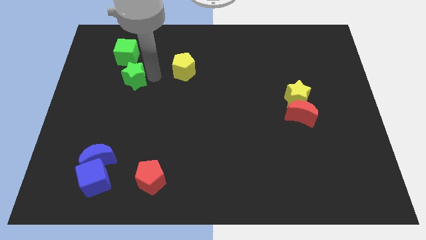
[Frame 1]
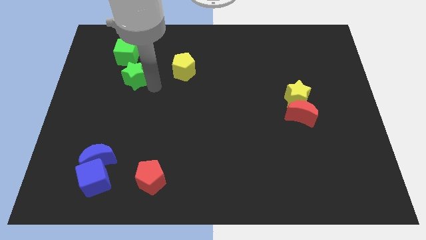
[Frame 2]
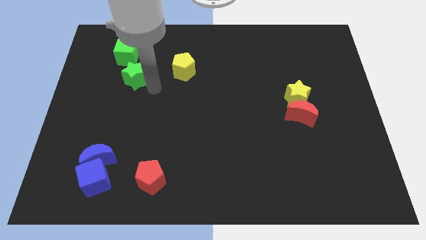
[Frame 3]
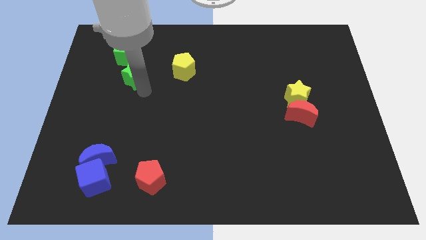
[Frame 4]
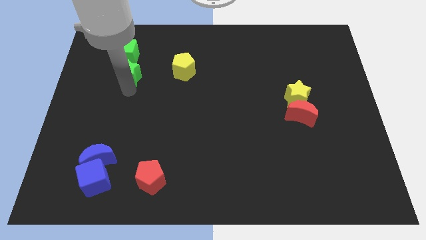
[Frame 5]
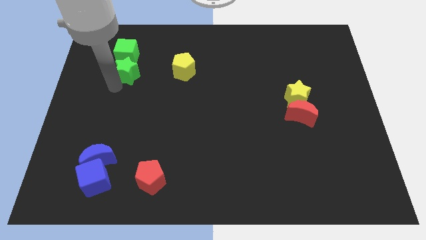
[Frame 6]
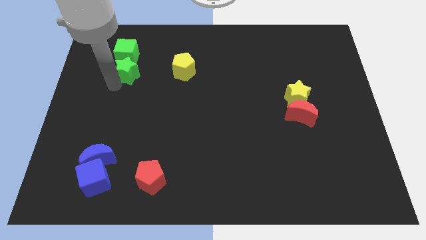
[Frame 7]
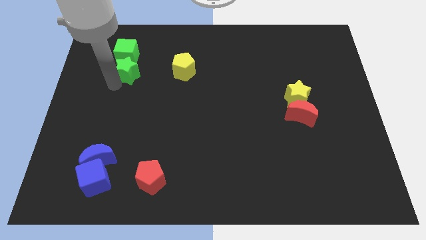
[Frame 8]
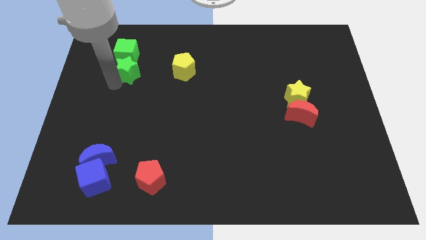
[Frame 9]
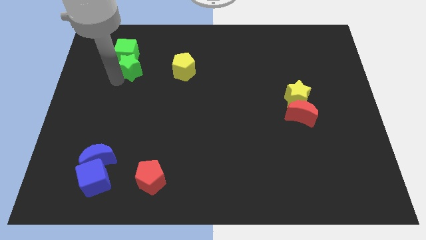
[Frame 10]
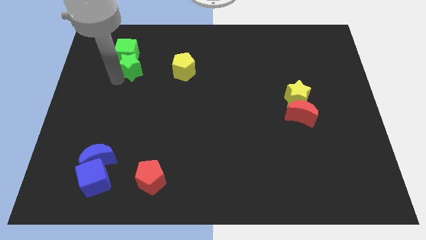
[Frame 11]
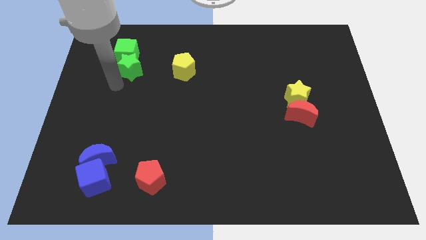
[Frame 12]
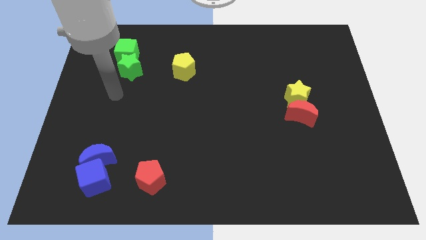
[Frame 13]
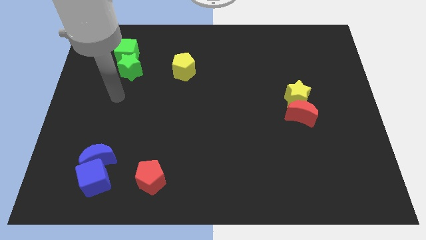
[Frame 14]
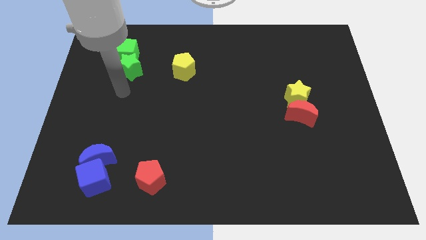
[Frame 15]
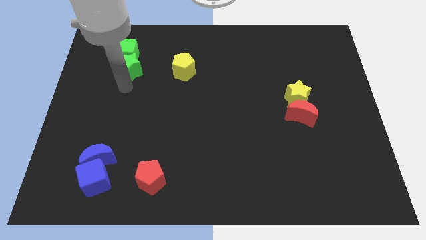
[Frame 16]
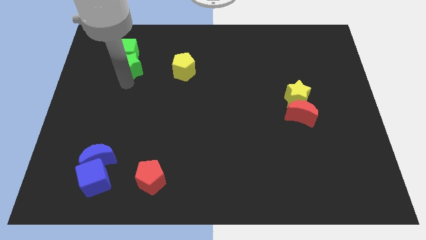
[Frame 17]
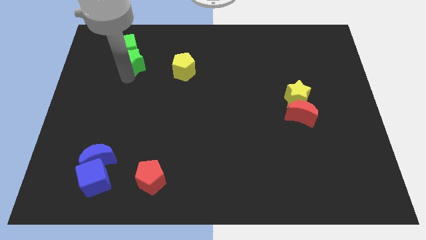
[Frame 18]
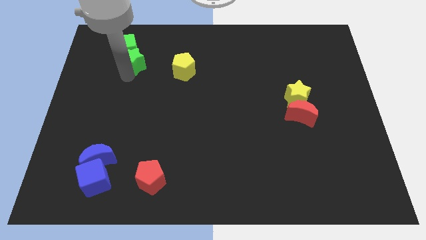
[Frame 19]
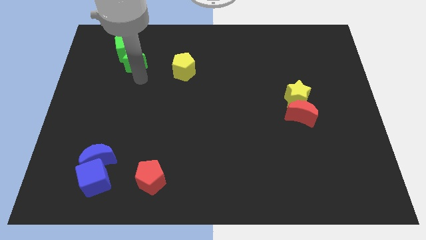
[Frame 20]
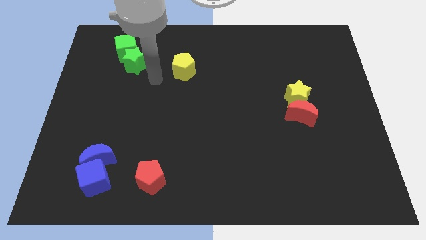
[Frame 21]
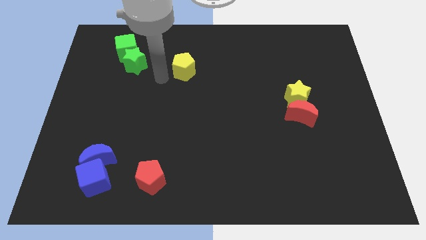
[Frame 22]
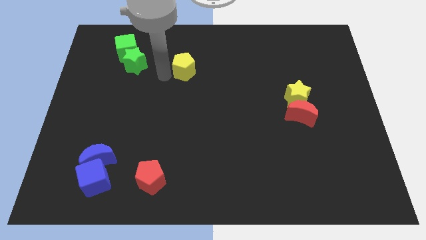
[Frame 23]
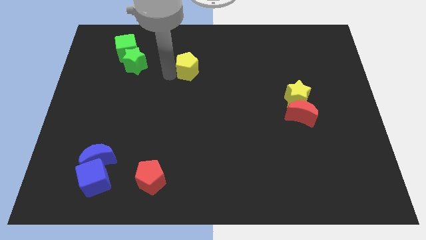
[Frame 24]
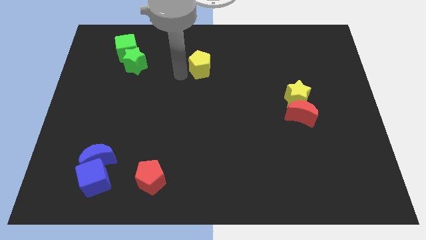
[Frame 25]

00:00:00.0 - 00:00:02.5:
slightly push the green star into green cube

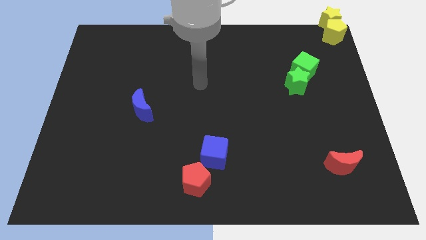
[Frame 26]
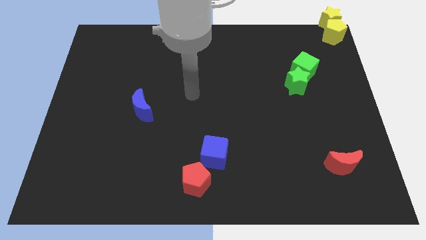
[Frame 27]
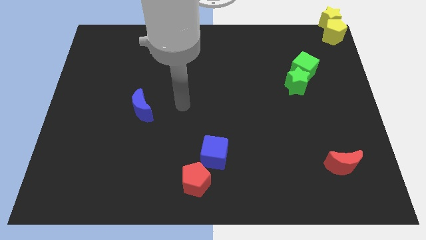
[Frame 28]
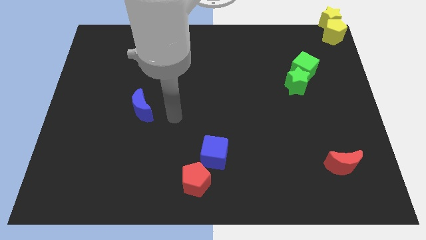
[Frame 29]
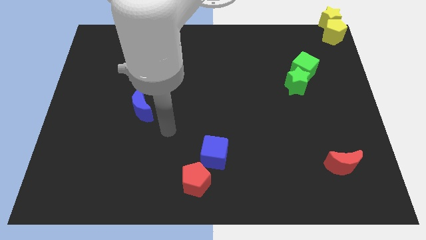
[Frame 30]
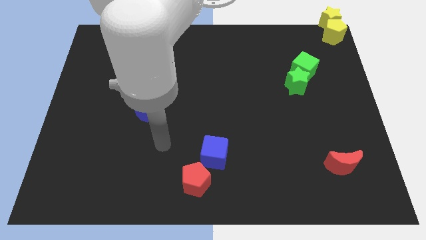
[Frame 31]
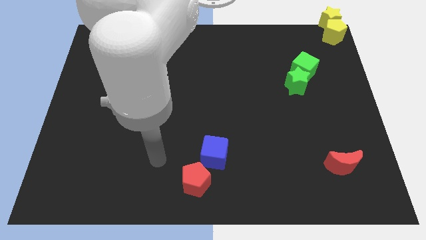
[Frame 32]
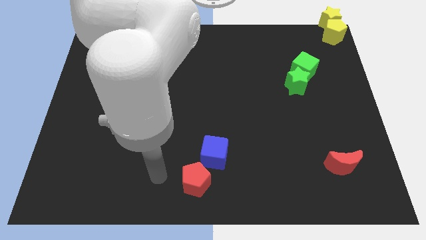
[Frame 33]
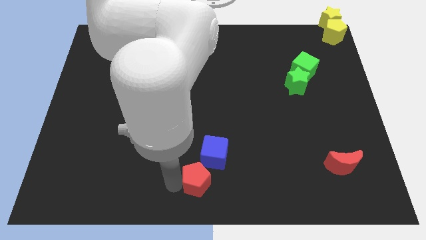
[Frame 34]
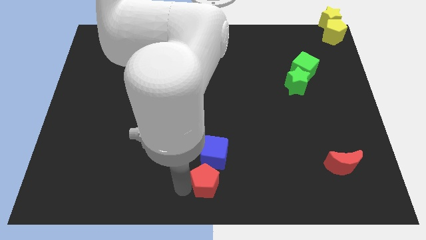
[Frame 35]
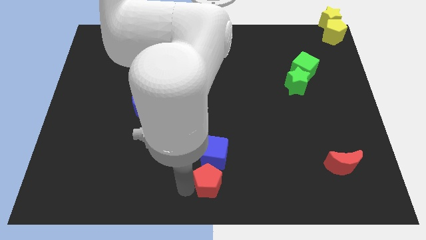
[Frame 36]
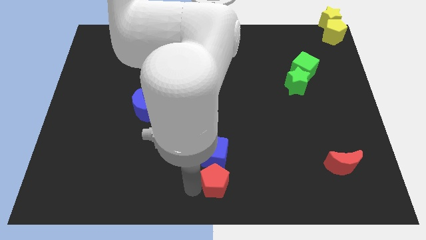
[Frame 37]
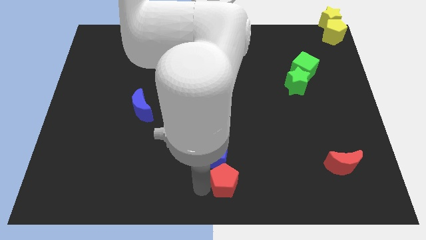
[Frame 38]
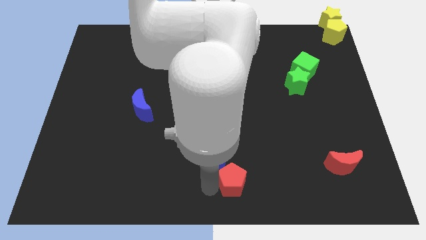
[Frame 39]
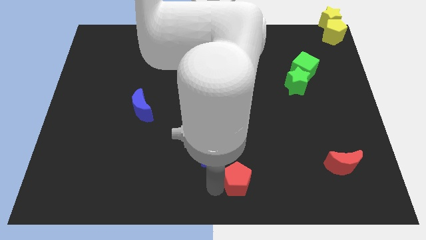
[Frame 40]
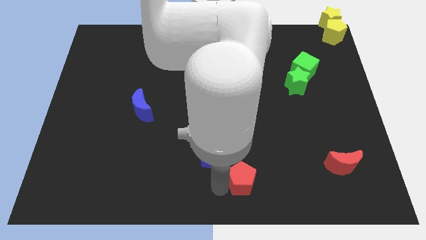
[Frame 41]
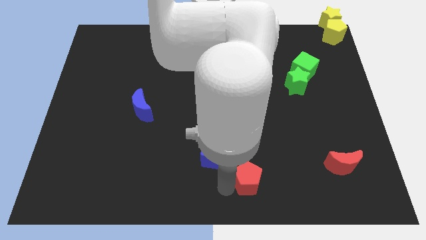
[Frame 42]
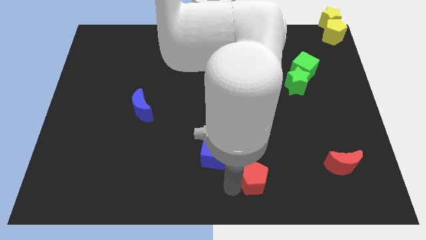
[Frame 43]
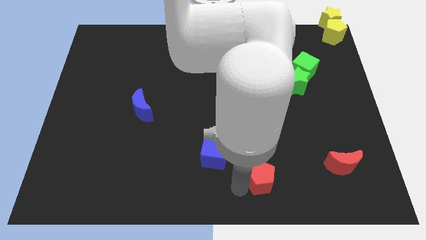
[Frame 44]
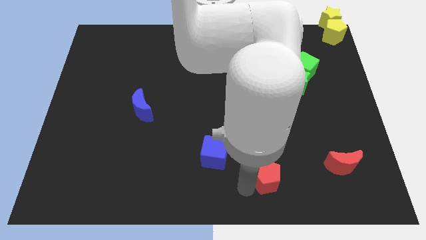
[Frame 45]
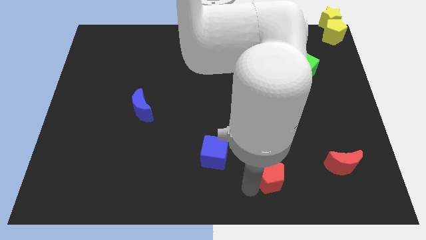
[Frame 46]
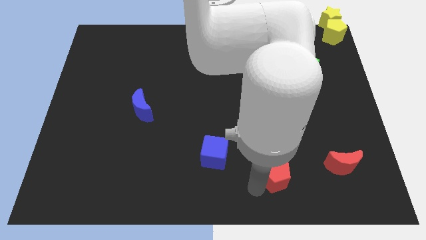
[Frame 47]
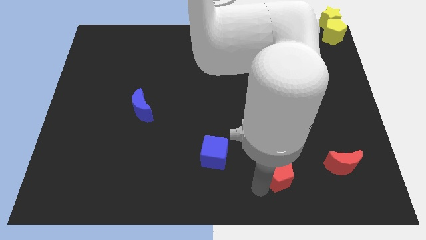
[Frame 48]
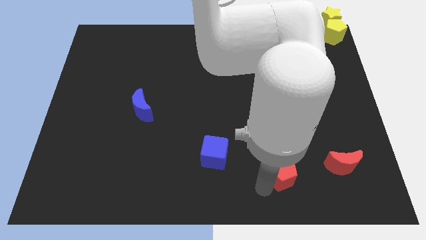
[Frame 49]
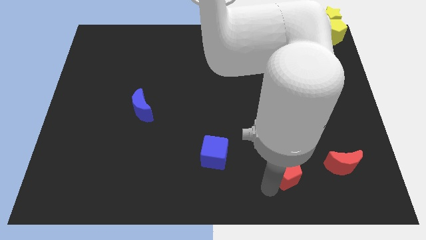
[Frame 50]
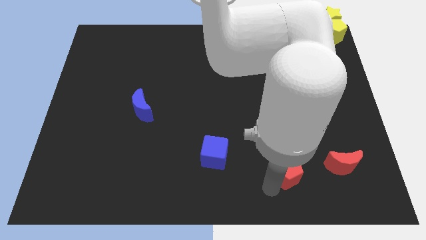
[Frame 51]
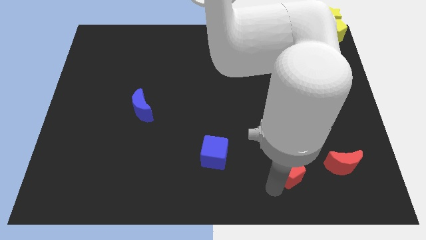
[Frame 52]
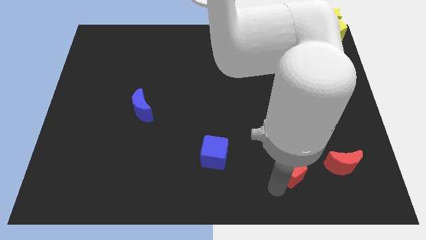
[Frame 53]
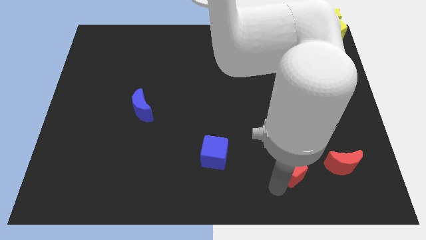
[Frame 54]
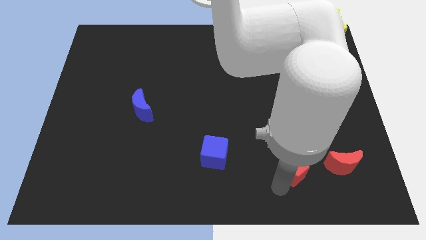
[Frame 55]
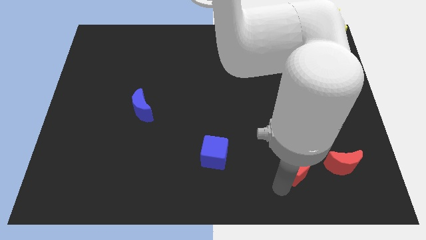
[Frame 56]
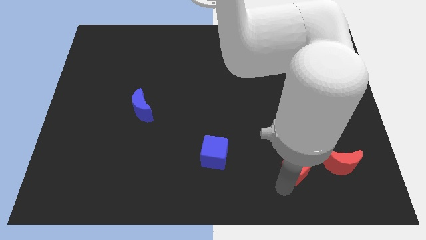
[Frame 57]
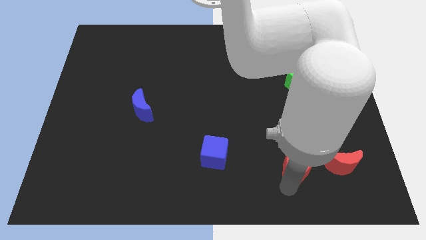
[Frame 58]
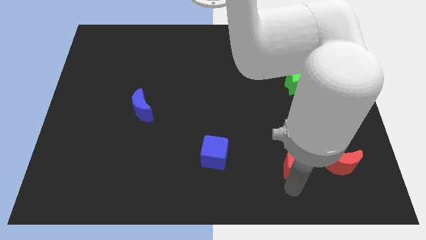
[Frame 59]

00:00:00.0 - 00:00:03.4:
slide the red pentagon towards the left side of the red moon

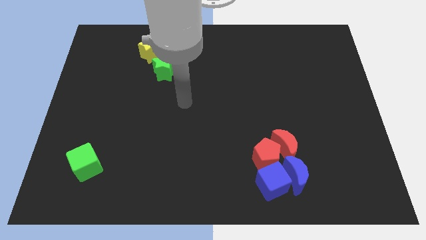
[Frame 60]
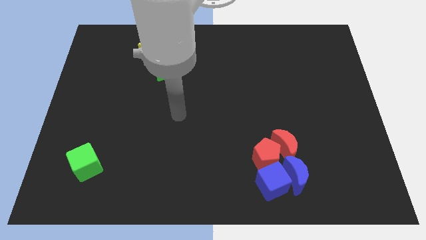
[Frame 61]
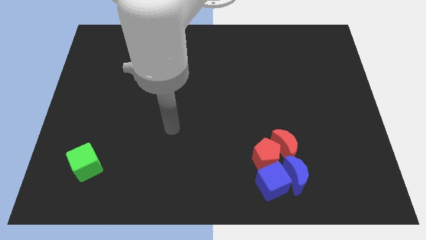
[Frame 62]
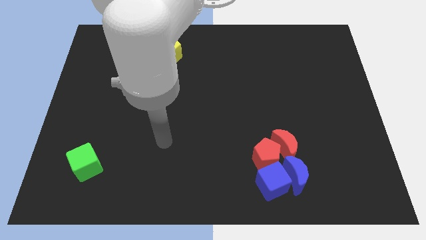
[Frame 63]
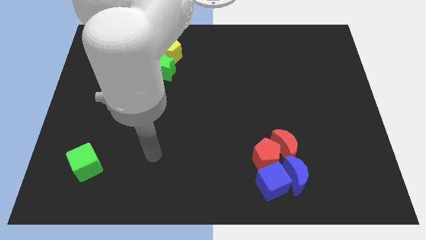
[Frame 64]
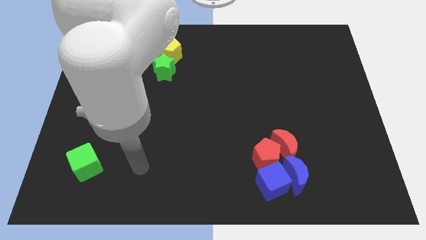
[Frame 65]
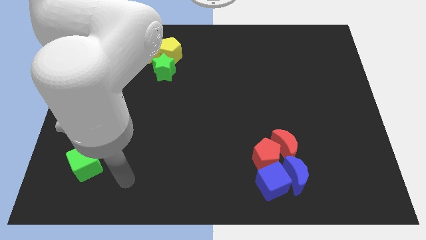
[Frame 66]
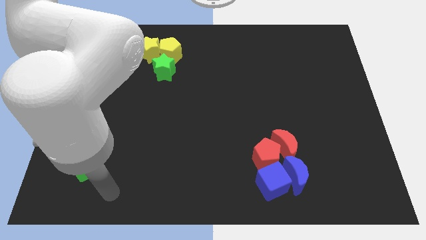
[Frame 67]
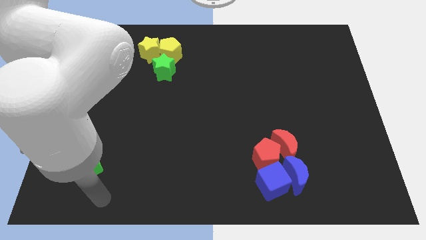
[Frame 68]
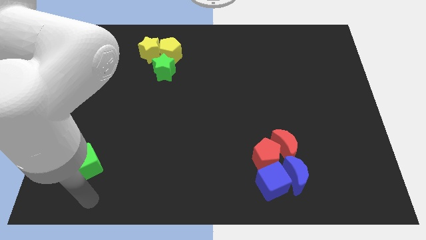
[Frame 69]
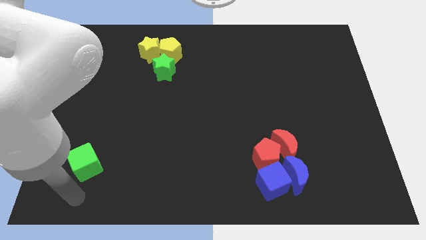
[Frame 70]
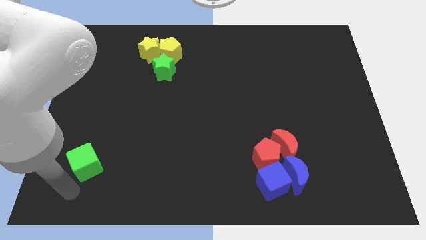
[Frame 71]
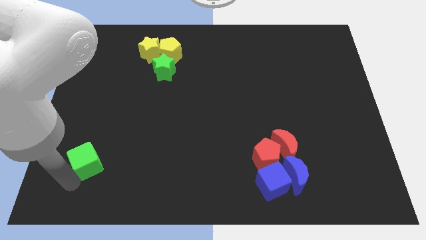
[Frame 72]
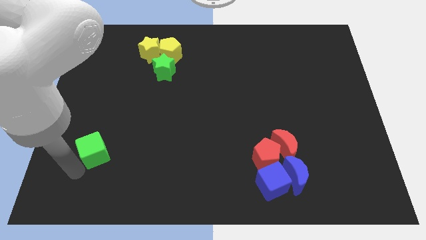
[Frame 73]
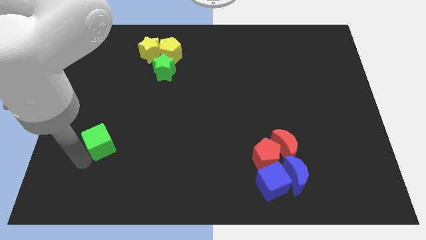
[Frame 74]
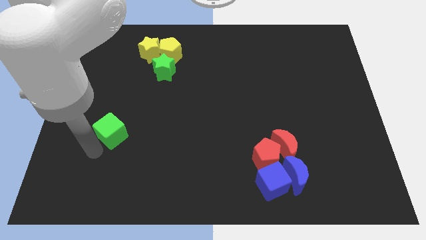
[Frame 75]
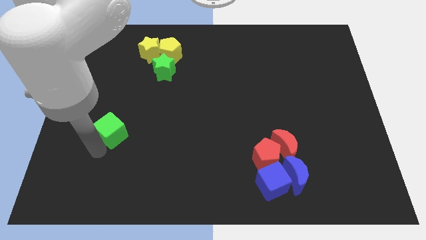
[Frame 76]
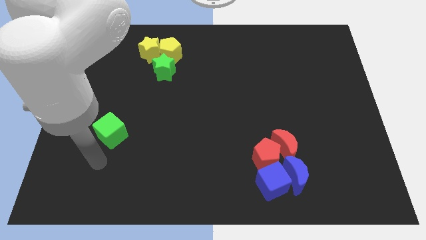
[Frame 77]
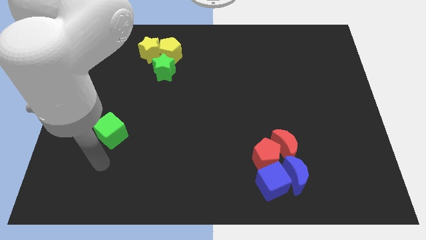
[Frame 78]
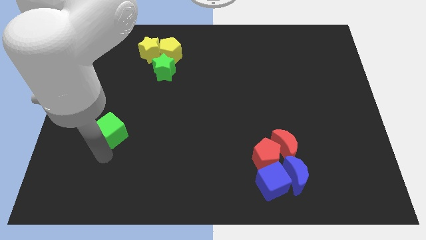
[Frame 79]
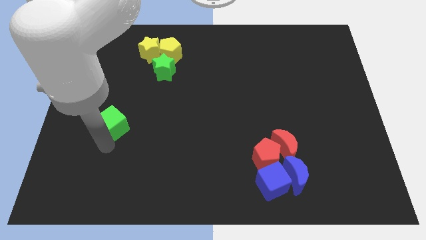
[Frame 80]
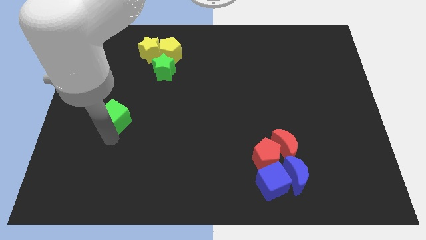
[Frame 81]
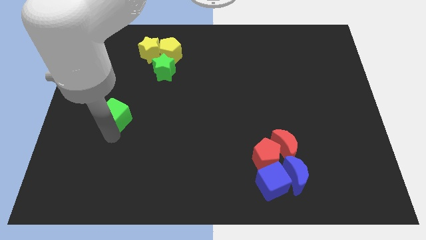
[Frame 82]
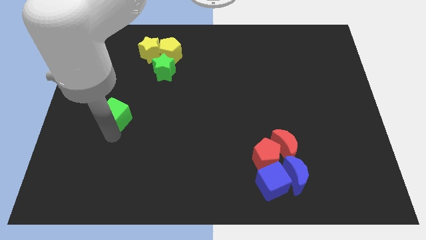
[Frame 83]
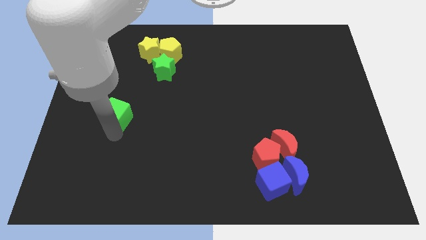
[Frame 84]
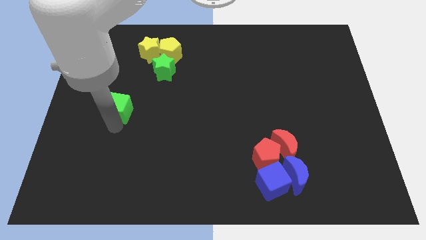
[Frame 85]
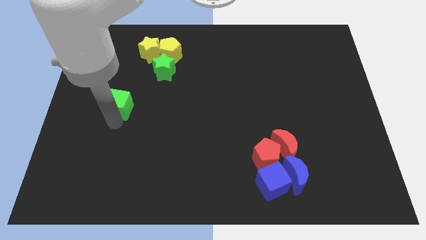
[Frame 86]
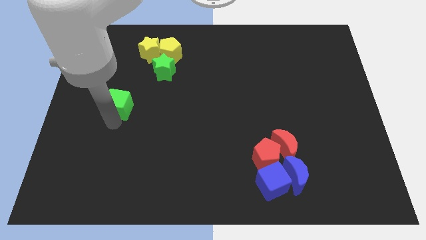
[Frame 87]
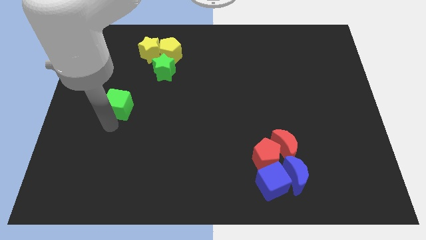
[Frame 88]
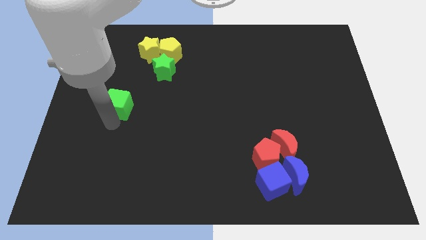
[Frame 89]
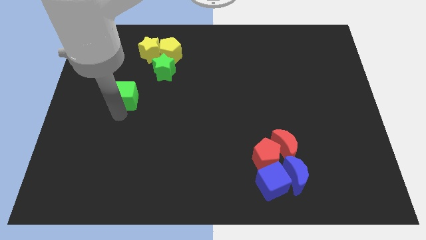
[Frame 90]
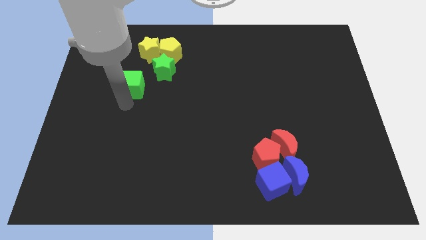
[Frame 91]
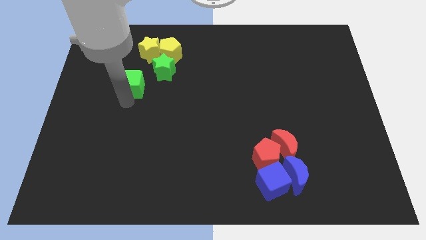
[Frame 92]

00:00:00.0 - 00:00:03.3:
move the green cube to the bottom left of the green star
